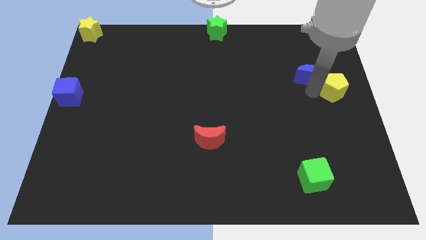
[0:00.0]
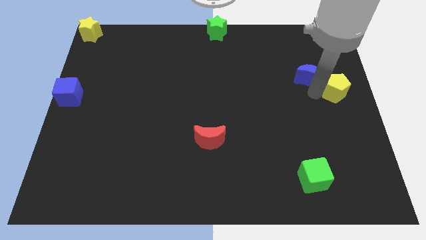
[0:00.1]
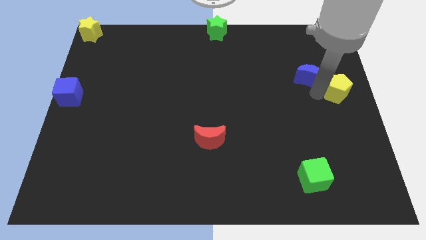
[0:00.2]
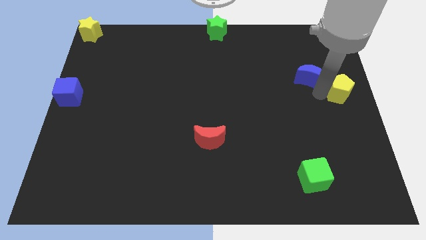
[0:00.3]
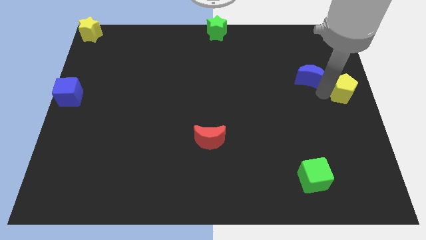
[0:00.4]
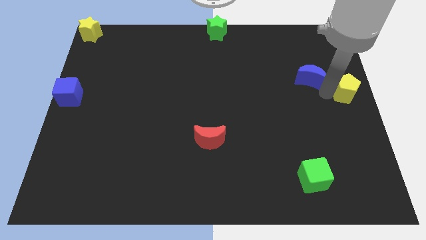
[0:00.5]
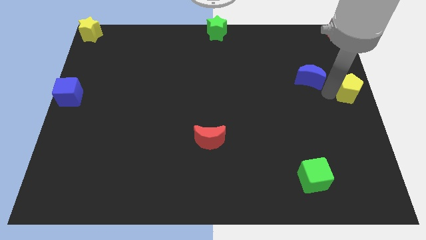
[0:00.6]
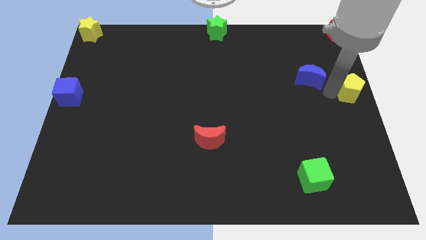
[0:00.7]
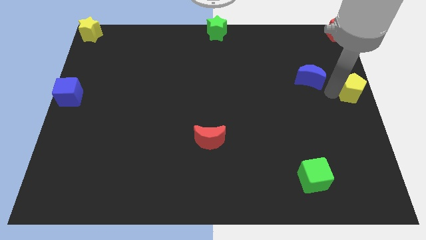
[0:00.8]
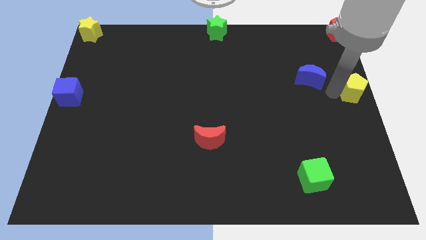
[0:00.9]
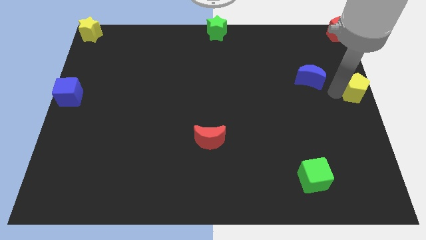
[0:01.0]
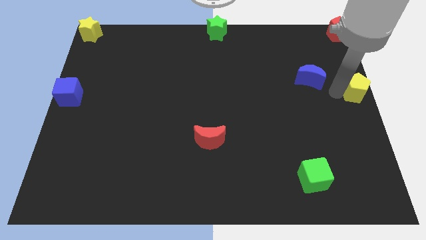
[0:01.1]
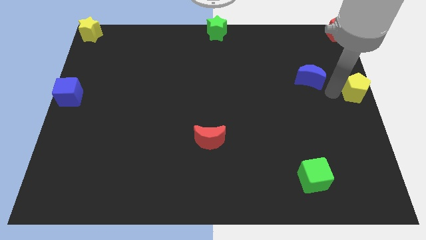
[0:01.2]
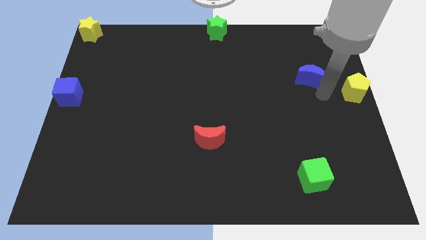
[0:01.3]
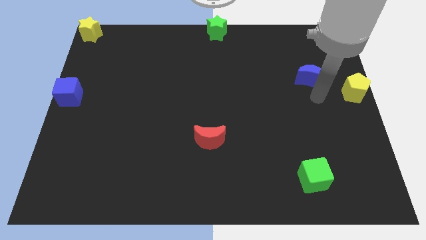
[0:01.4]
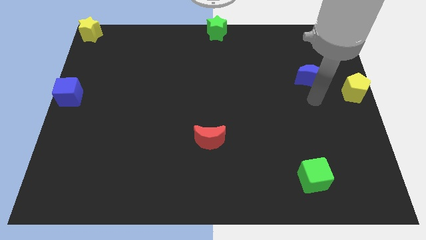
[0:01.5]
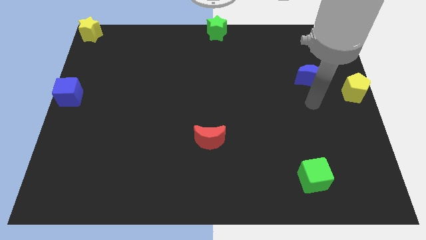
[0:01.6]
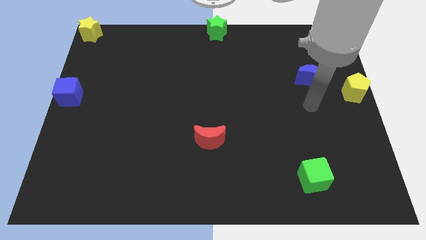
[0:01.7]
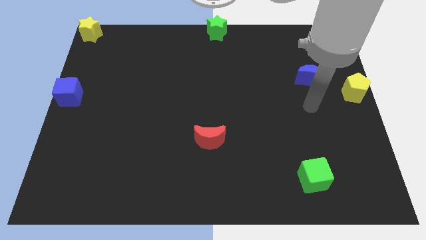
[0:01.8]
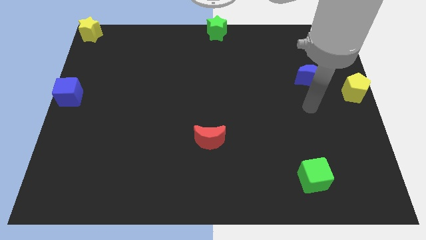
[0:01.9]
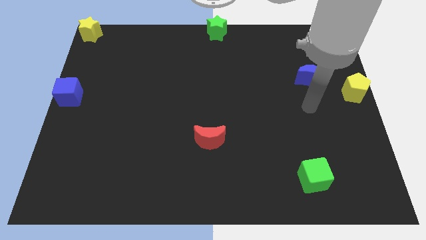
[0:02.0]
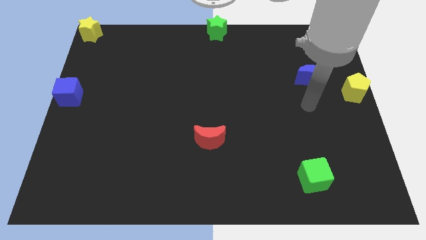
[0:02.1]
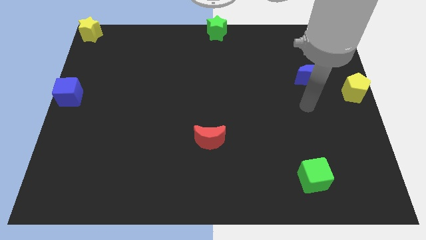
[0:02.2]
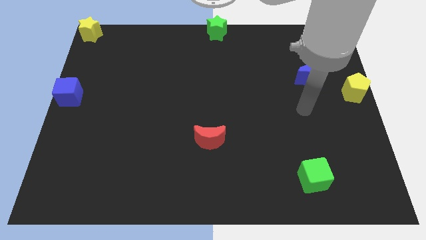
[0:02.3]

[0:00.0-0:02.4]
move the yellow pentagon to the right center of the board

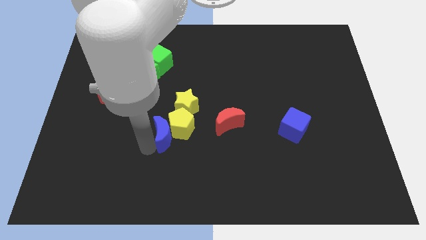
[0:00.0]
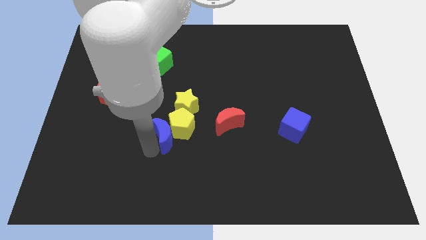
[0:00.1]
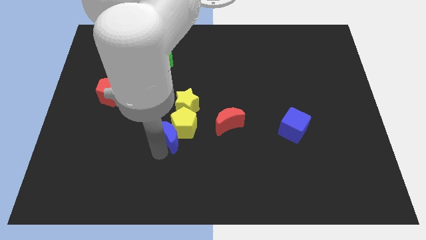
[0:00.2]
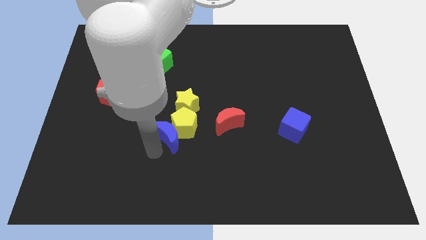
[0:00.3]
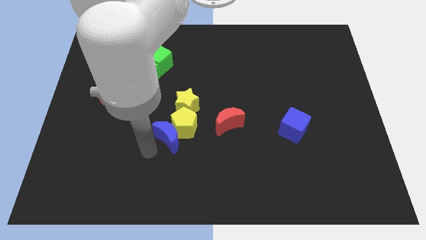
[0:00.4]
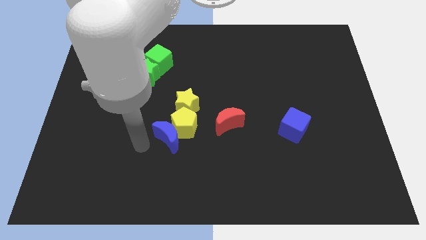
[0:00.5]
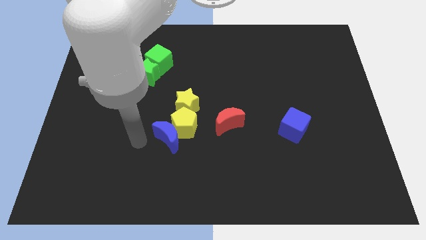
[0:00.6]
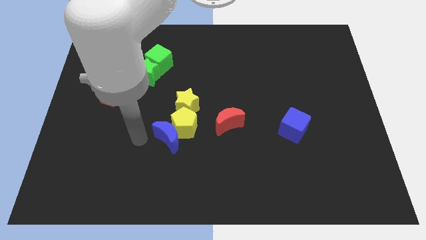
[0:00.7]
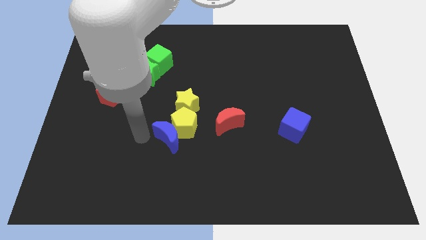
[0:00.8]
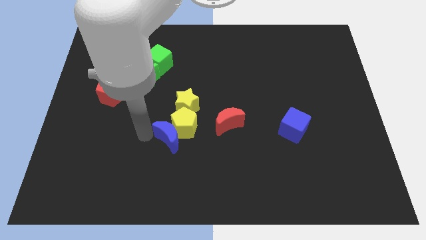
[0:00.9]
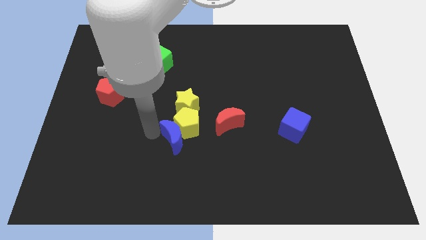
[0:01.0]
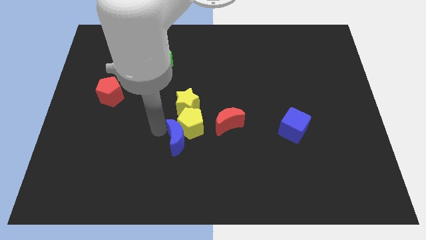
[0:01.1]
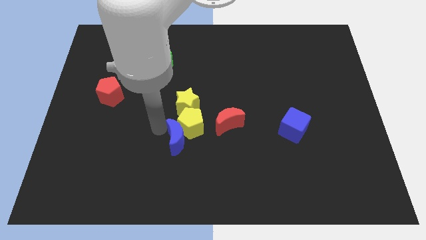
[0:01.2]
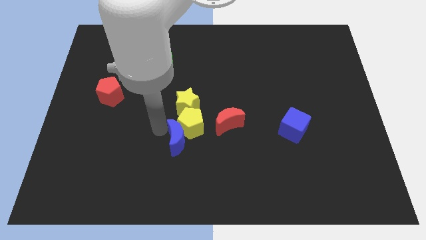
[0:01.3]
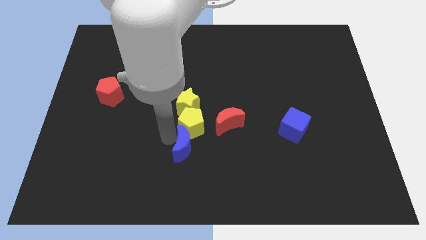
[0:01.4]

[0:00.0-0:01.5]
move the blue crescent to the bottom of the yellow pentagon

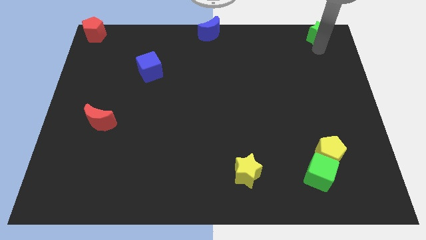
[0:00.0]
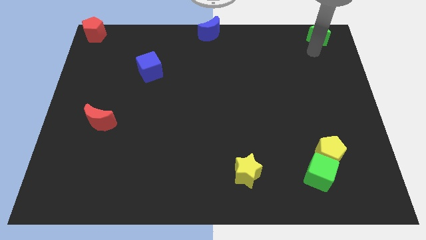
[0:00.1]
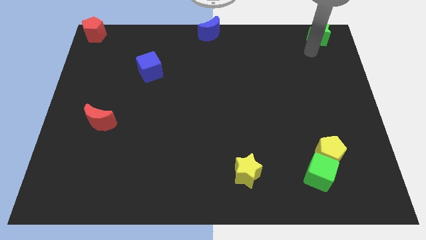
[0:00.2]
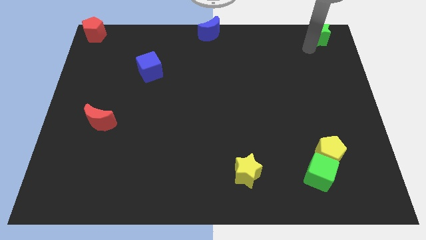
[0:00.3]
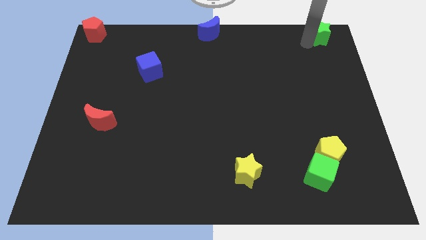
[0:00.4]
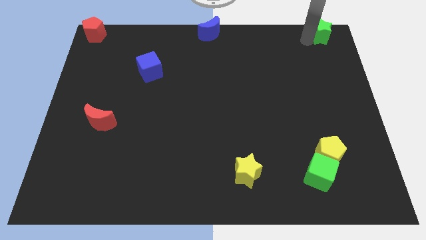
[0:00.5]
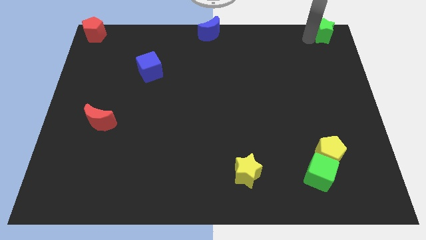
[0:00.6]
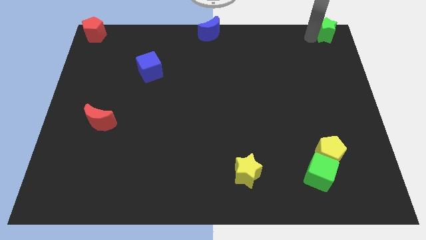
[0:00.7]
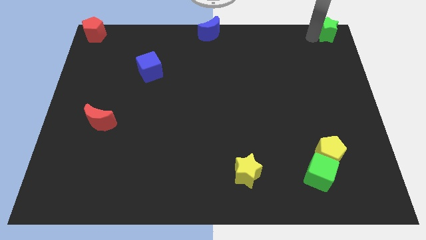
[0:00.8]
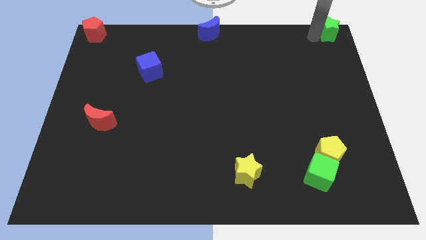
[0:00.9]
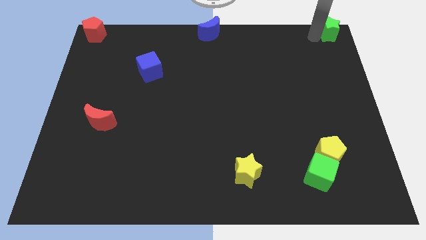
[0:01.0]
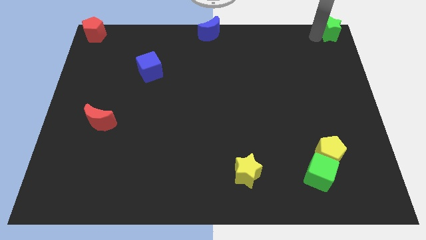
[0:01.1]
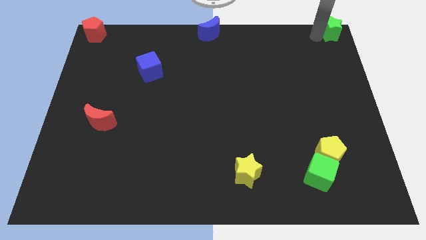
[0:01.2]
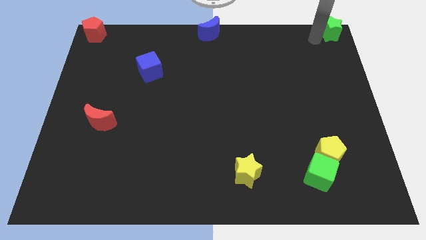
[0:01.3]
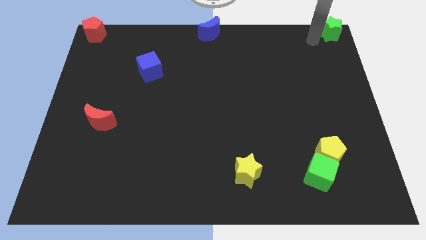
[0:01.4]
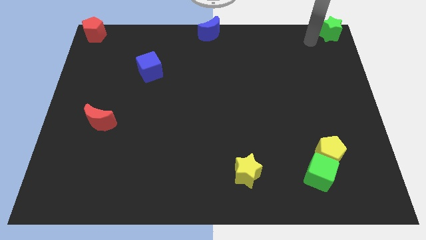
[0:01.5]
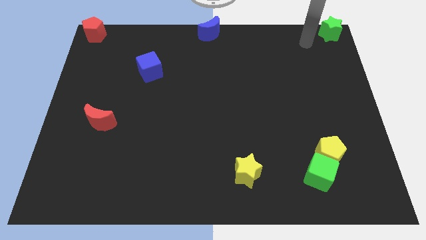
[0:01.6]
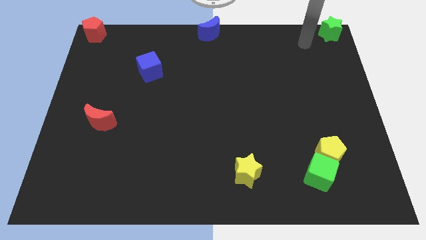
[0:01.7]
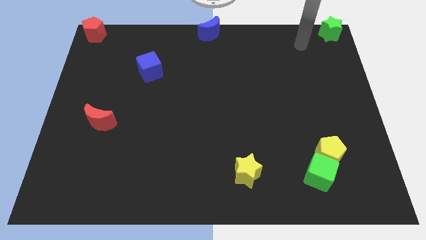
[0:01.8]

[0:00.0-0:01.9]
move the green star to the right top corner of the board

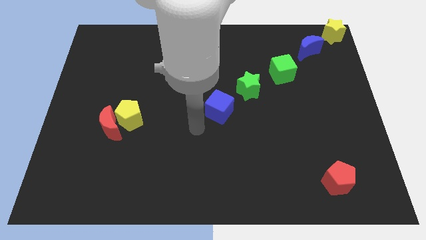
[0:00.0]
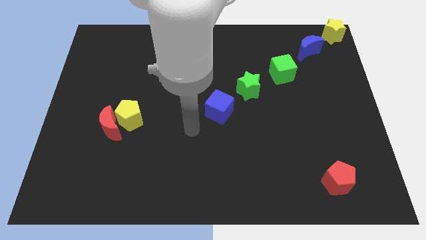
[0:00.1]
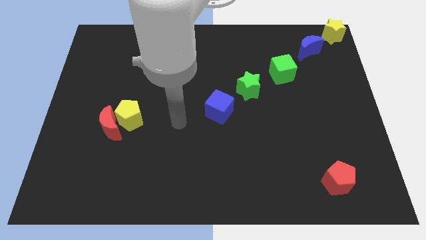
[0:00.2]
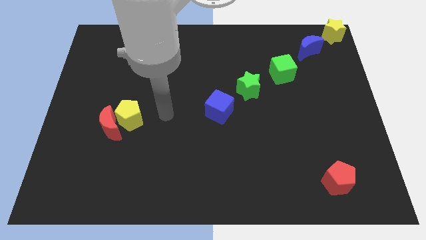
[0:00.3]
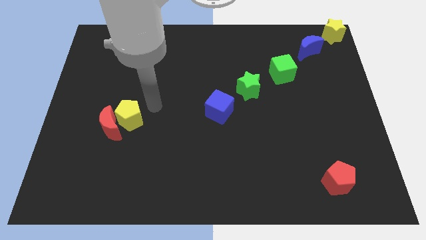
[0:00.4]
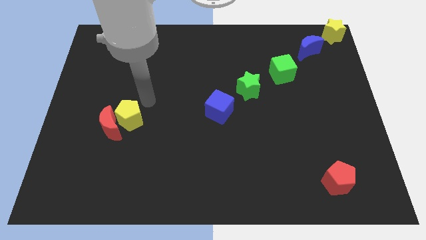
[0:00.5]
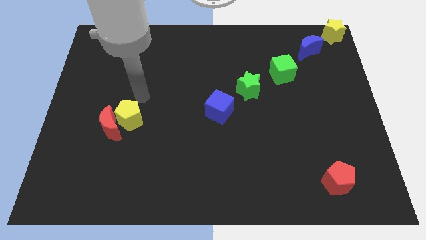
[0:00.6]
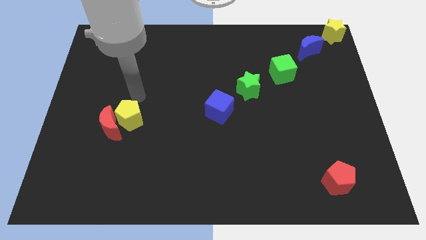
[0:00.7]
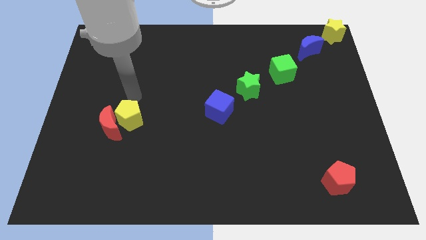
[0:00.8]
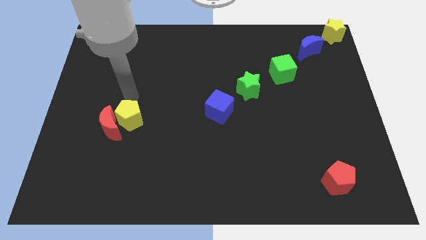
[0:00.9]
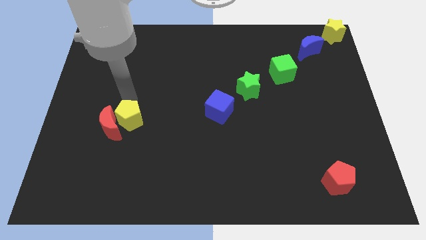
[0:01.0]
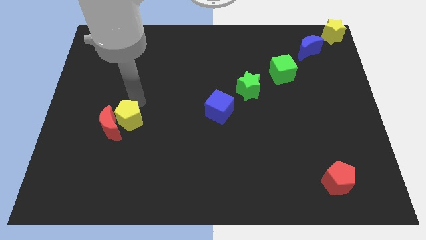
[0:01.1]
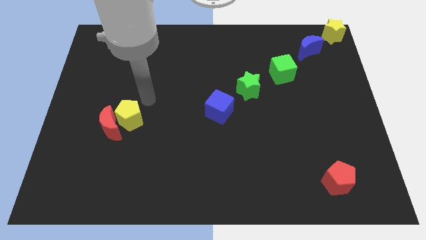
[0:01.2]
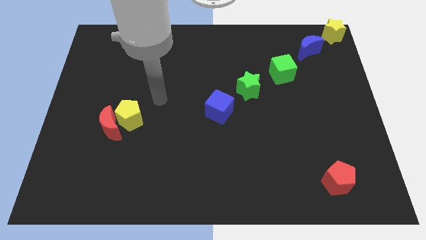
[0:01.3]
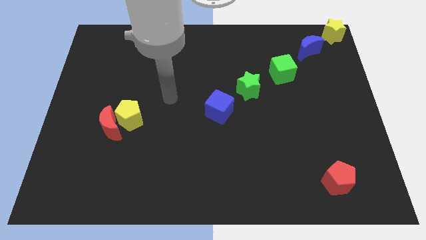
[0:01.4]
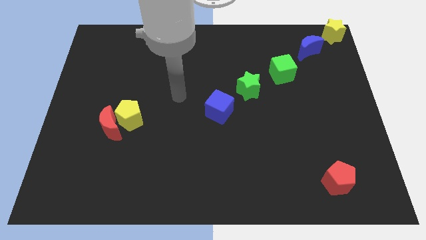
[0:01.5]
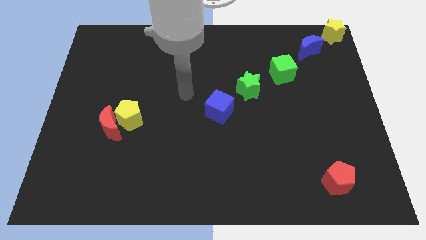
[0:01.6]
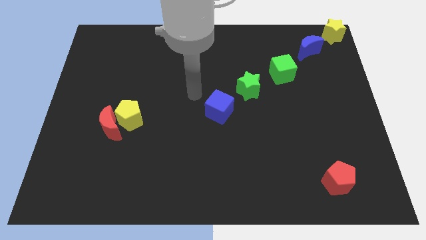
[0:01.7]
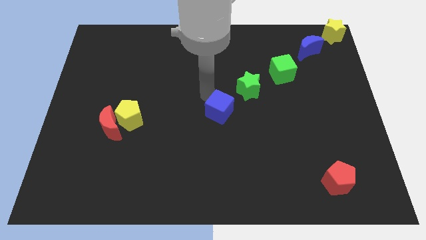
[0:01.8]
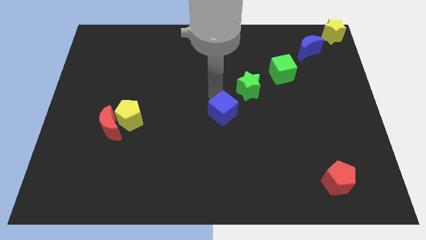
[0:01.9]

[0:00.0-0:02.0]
move your hand to the top of the blue cube

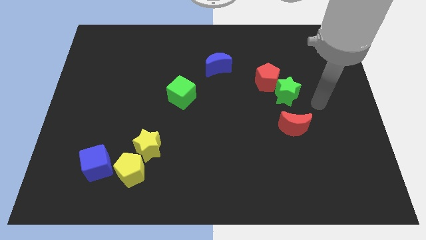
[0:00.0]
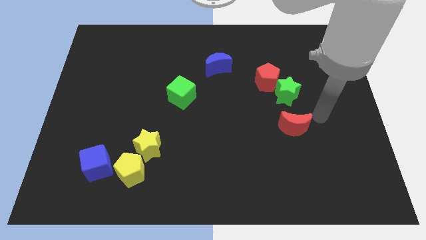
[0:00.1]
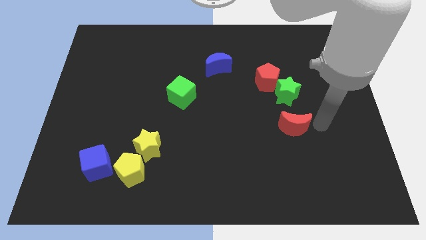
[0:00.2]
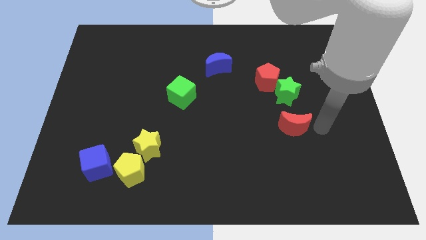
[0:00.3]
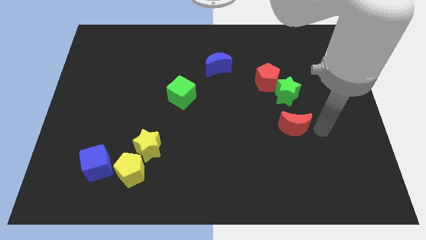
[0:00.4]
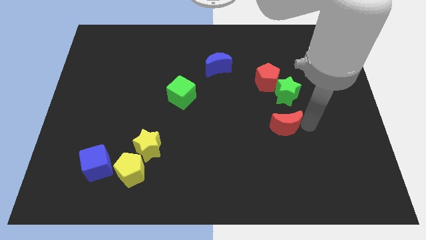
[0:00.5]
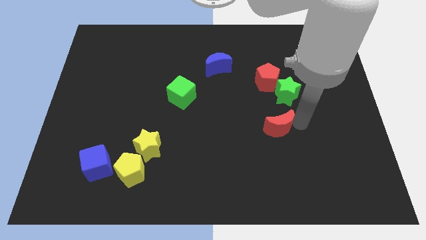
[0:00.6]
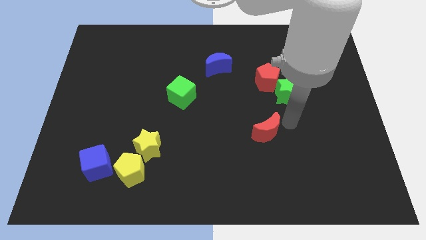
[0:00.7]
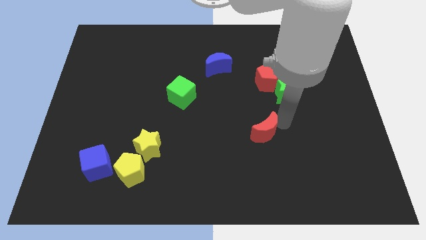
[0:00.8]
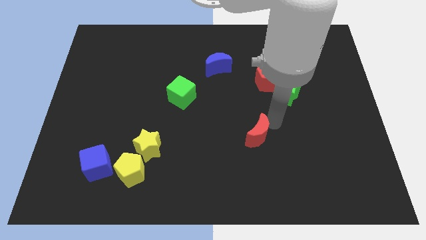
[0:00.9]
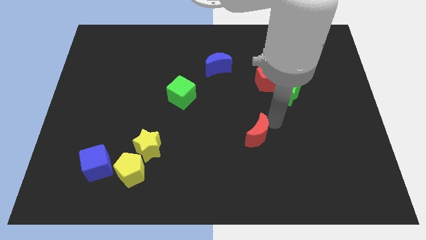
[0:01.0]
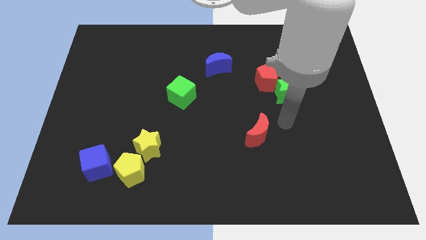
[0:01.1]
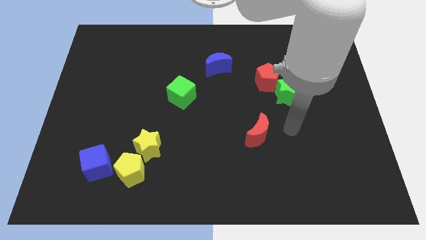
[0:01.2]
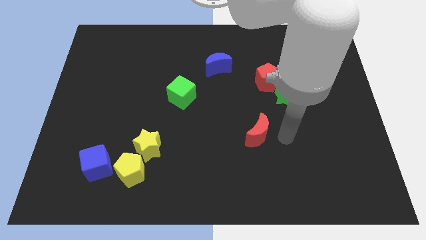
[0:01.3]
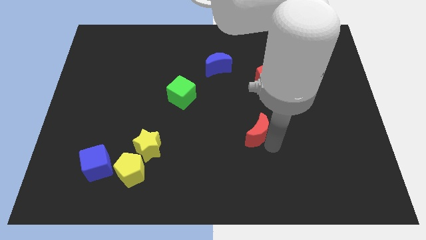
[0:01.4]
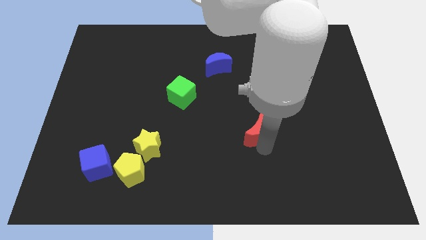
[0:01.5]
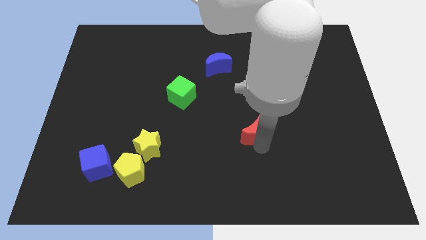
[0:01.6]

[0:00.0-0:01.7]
place the red moon diagonally to the green star
